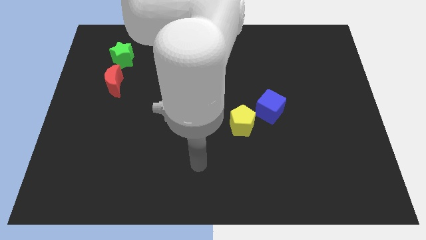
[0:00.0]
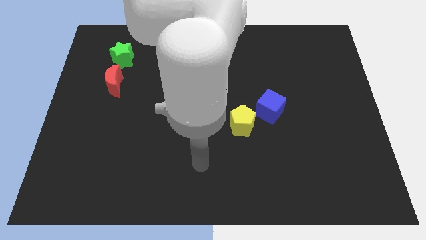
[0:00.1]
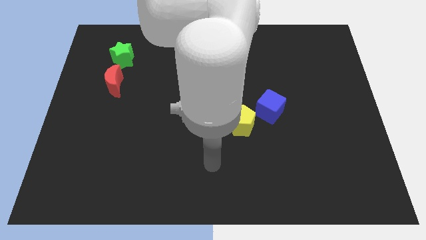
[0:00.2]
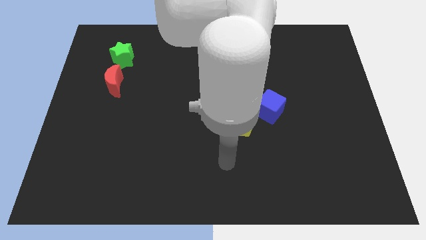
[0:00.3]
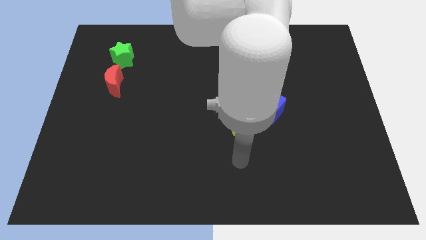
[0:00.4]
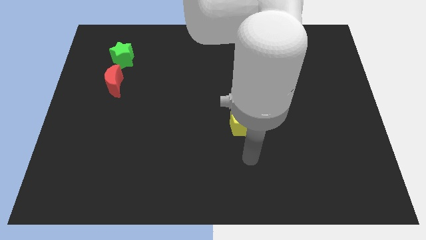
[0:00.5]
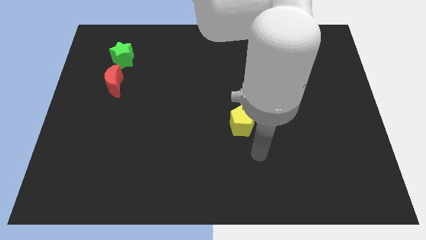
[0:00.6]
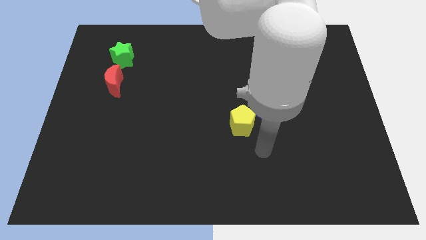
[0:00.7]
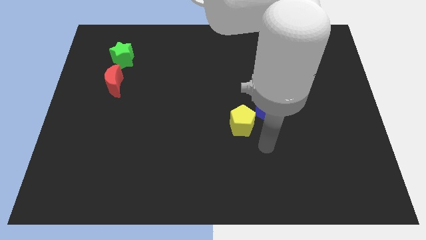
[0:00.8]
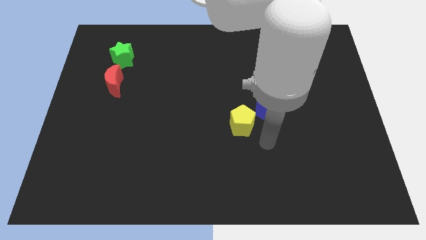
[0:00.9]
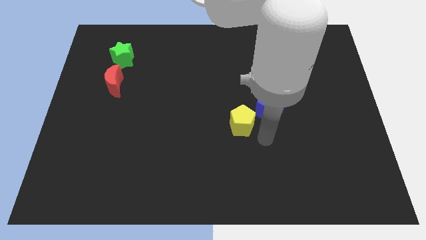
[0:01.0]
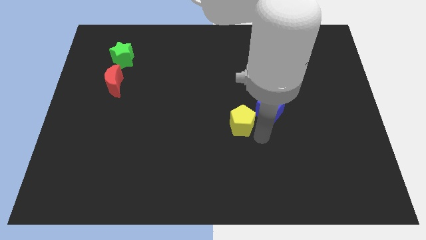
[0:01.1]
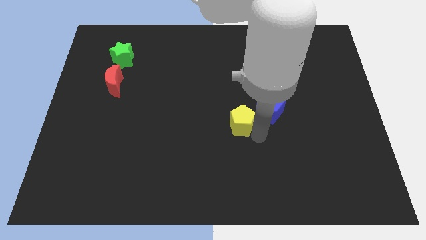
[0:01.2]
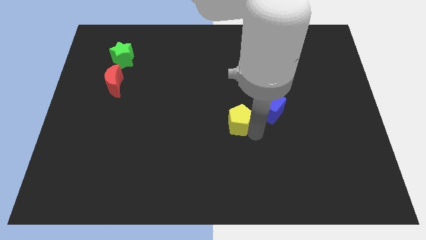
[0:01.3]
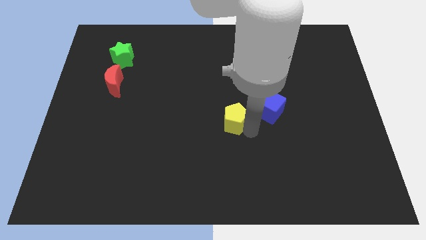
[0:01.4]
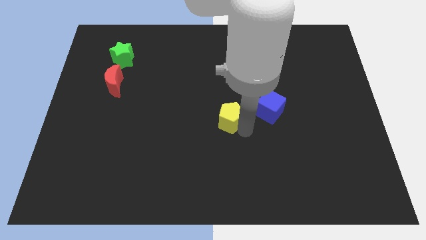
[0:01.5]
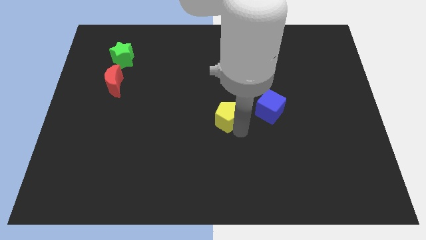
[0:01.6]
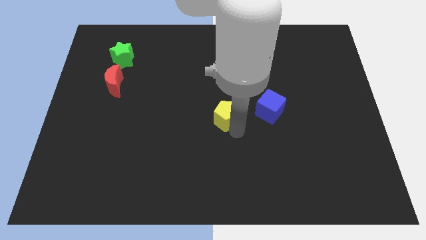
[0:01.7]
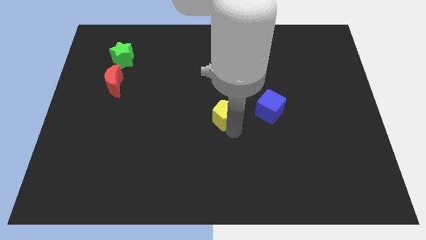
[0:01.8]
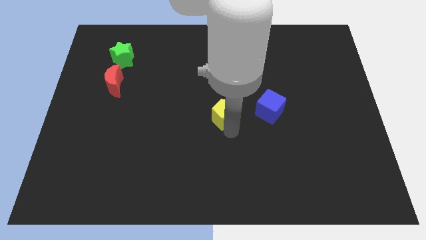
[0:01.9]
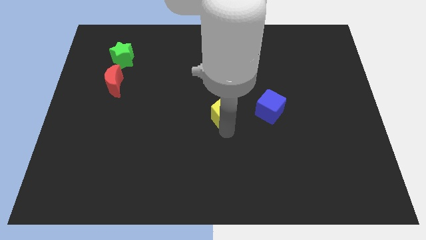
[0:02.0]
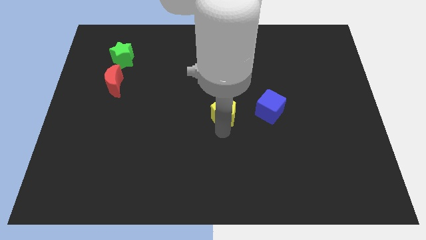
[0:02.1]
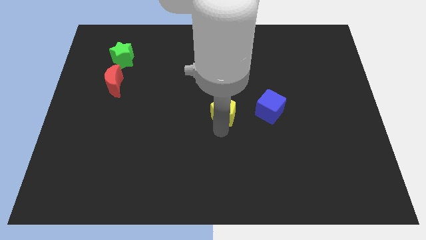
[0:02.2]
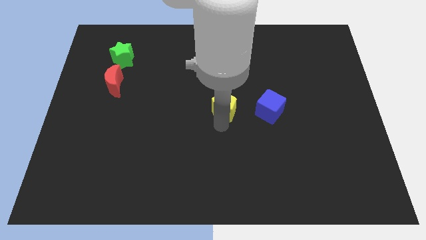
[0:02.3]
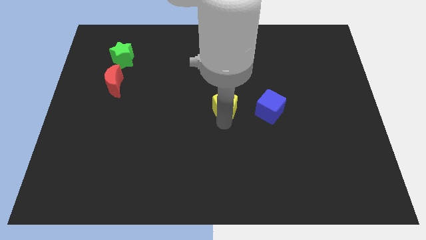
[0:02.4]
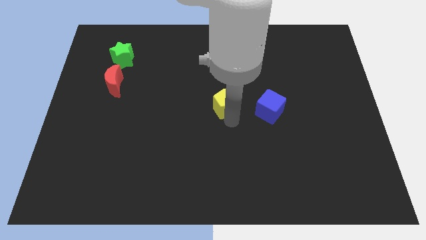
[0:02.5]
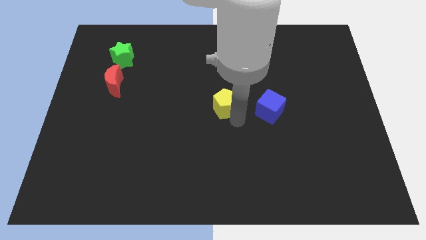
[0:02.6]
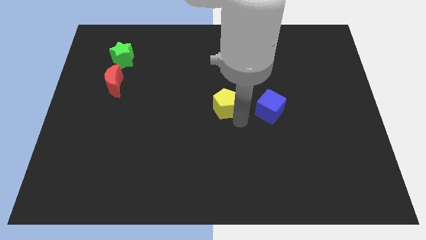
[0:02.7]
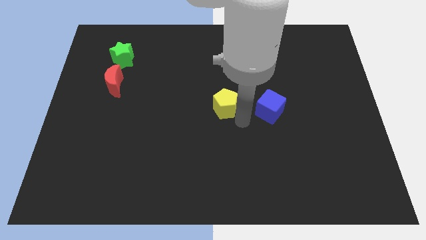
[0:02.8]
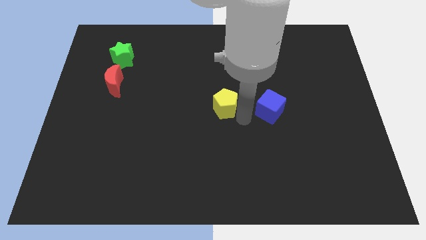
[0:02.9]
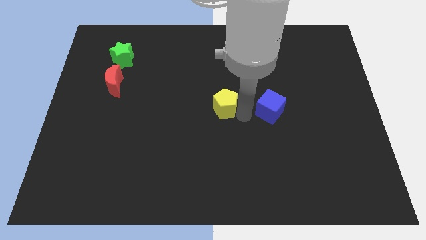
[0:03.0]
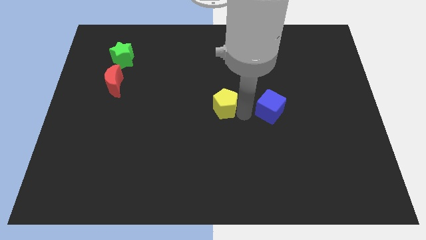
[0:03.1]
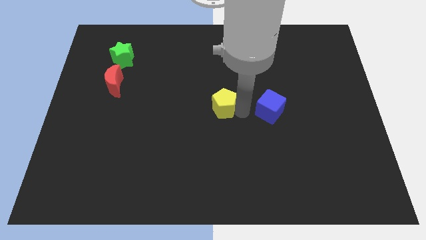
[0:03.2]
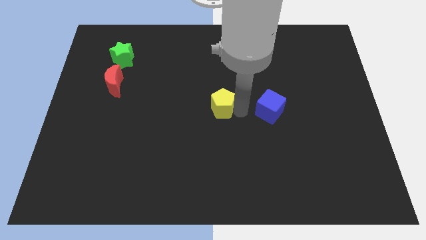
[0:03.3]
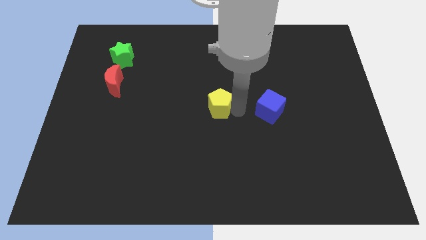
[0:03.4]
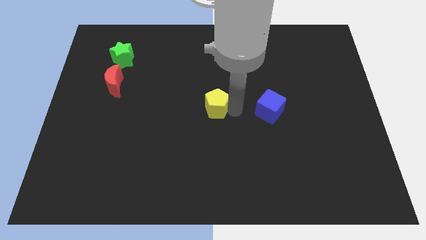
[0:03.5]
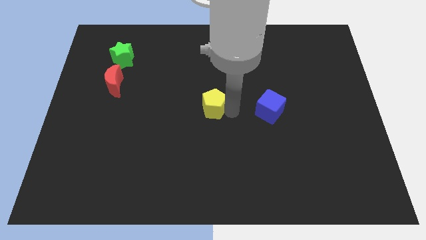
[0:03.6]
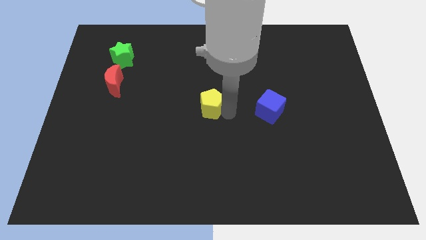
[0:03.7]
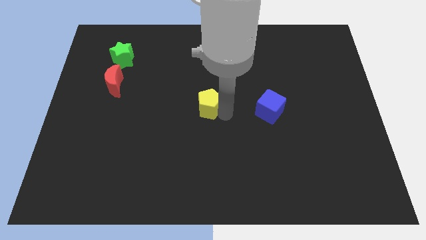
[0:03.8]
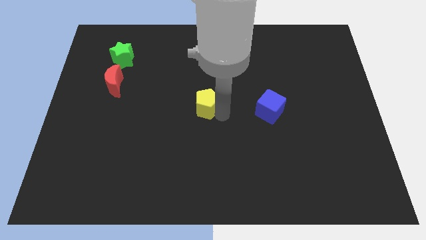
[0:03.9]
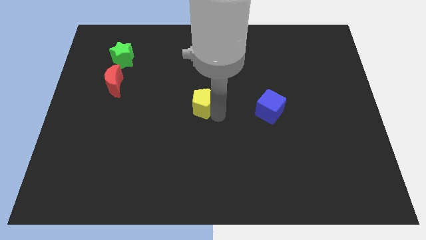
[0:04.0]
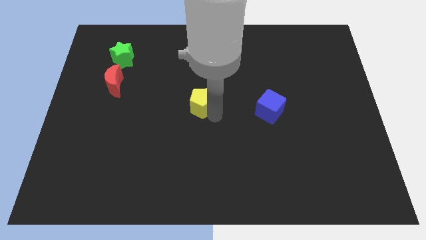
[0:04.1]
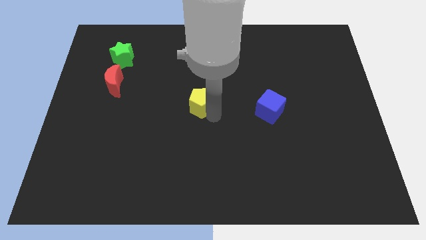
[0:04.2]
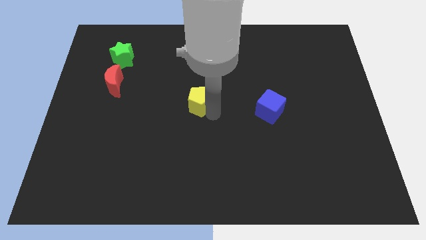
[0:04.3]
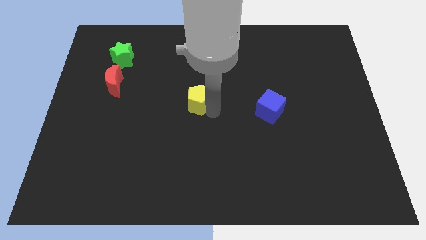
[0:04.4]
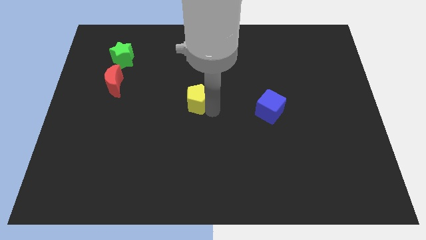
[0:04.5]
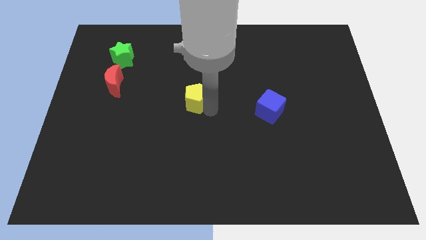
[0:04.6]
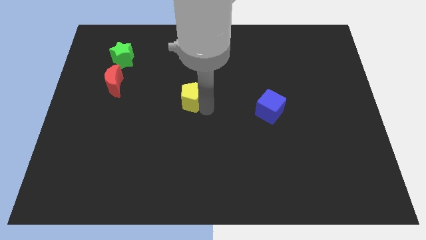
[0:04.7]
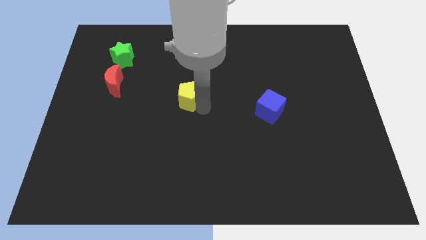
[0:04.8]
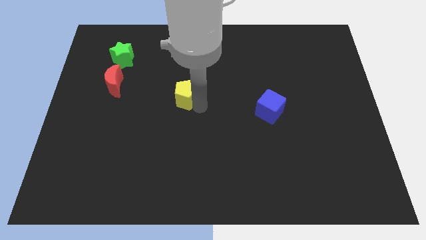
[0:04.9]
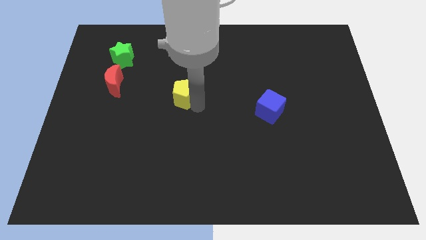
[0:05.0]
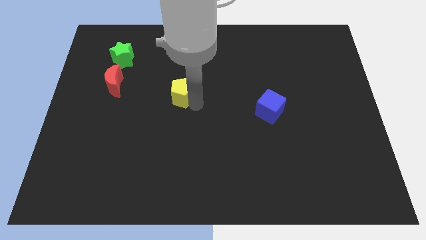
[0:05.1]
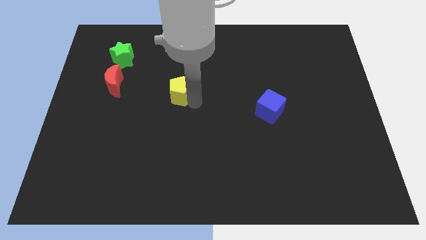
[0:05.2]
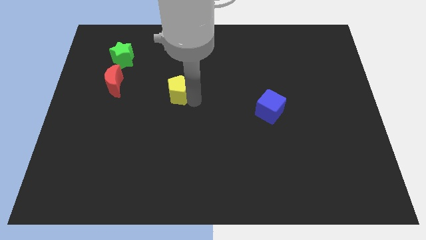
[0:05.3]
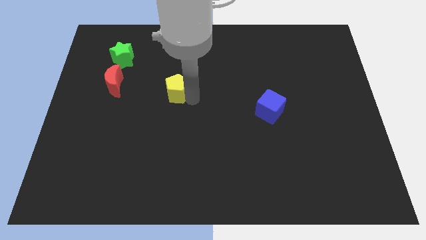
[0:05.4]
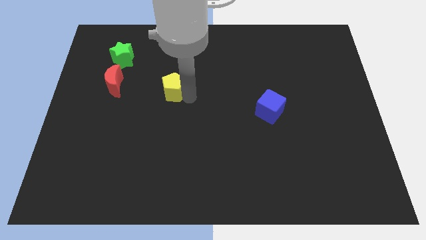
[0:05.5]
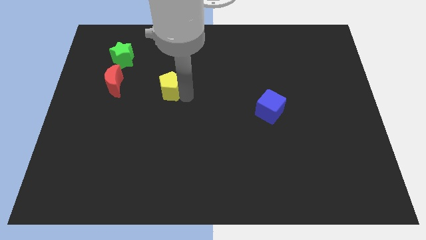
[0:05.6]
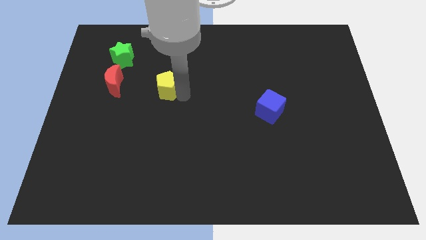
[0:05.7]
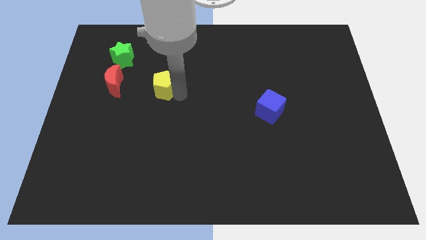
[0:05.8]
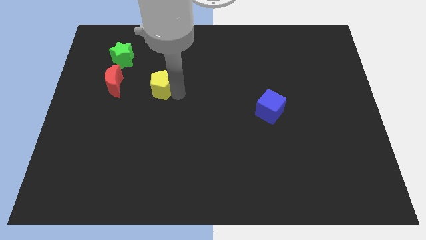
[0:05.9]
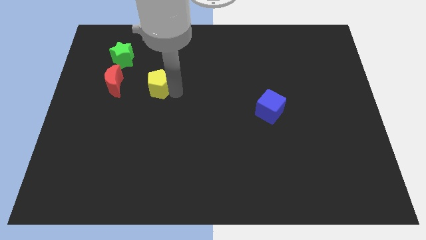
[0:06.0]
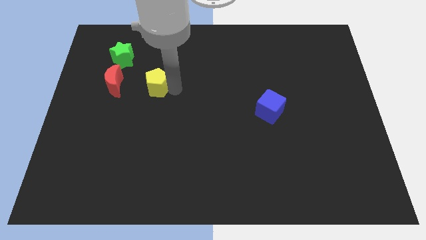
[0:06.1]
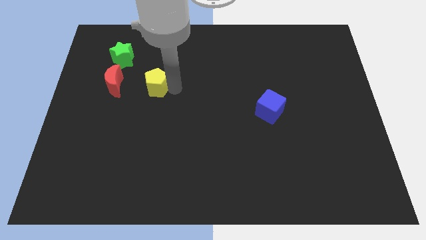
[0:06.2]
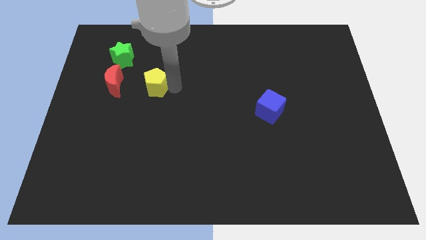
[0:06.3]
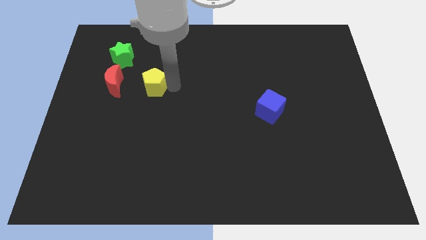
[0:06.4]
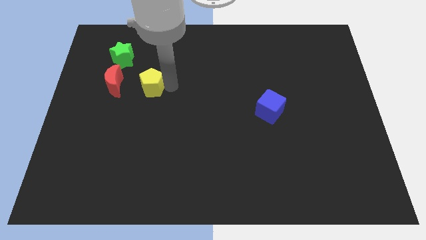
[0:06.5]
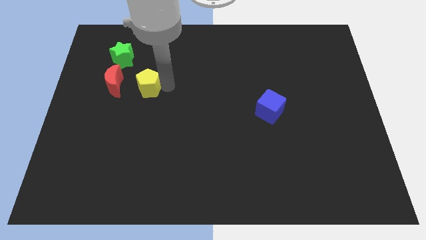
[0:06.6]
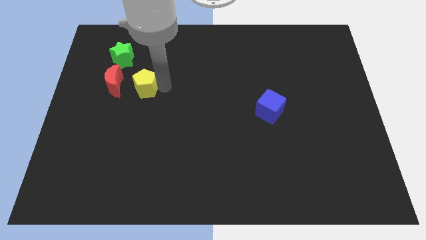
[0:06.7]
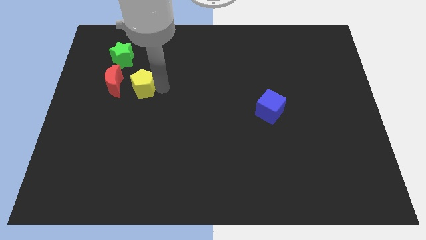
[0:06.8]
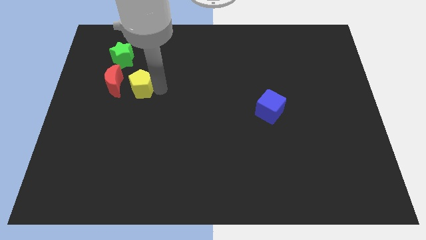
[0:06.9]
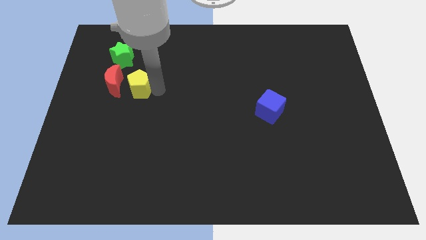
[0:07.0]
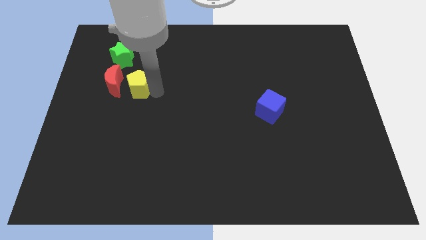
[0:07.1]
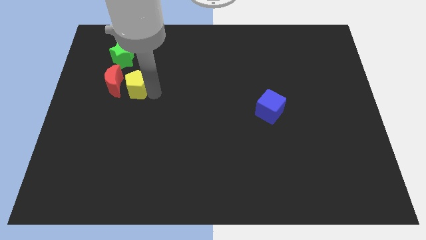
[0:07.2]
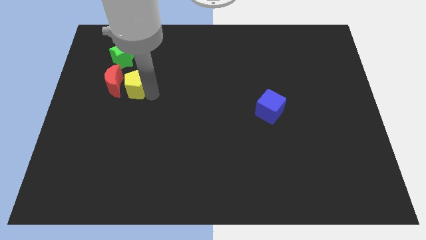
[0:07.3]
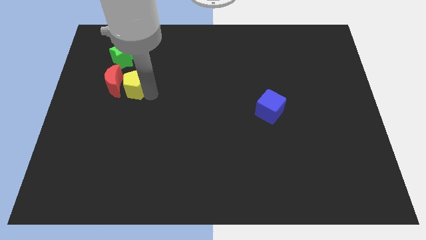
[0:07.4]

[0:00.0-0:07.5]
push the yellow block towards the red moon

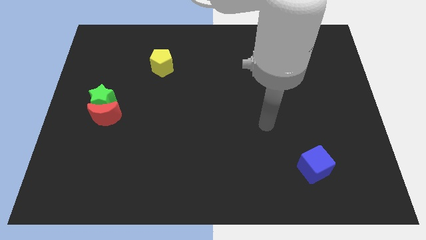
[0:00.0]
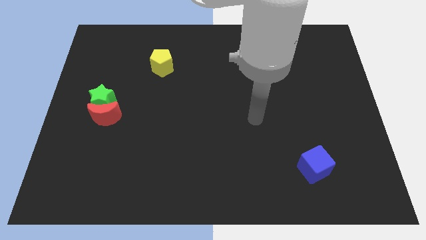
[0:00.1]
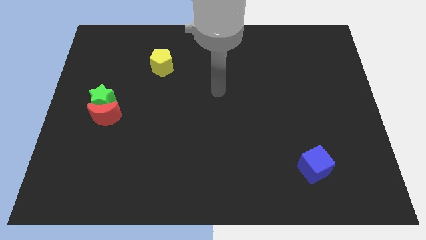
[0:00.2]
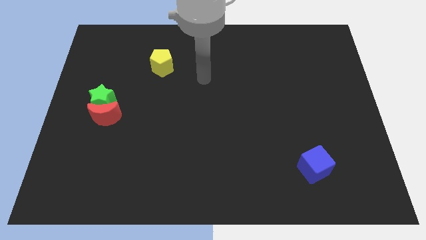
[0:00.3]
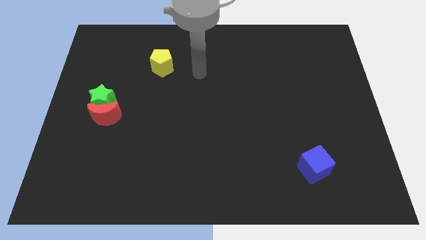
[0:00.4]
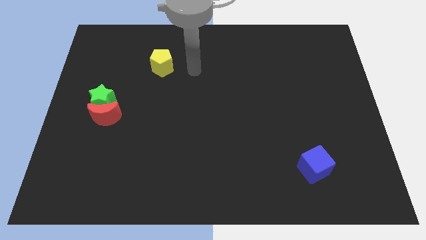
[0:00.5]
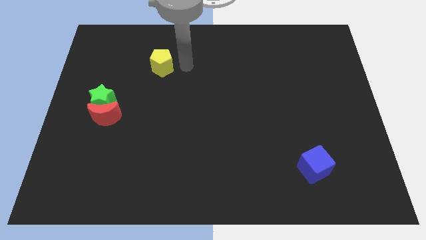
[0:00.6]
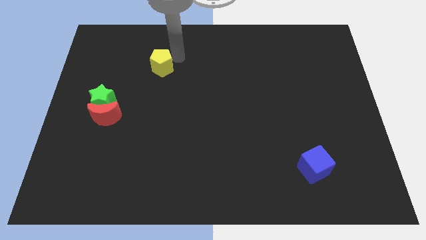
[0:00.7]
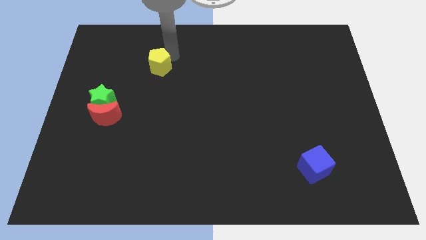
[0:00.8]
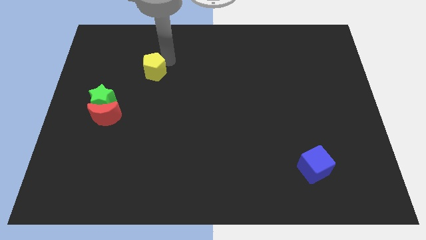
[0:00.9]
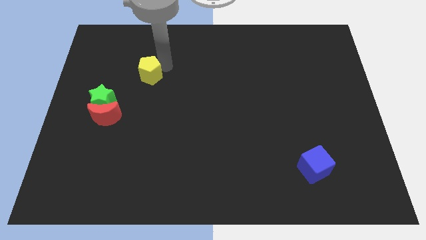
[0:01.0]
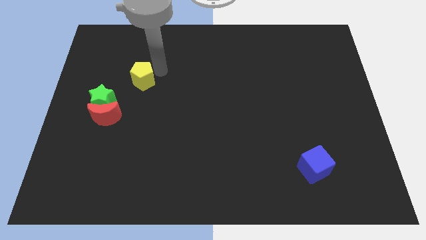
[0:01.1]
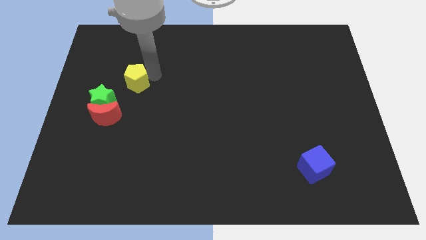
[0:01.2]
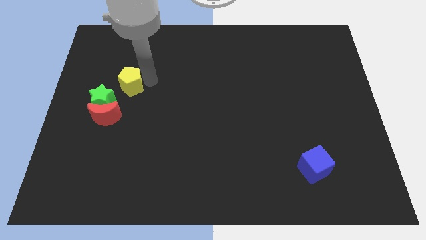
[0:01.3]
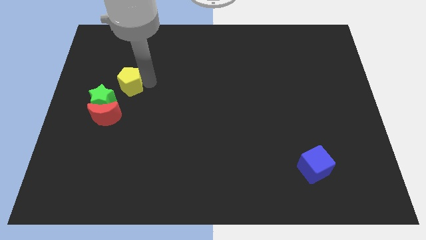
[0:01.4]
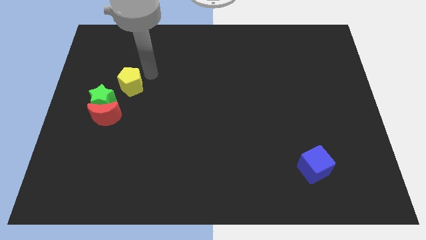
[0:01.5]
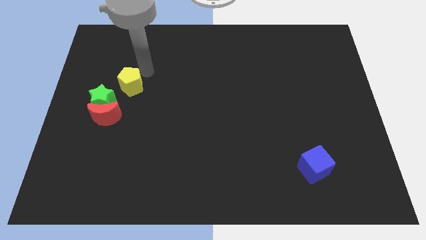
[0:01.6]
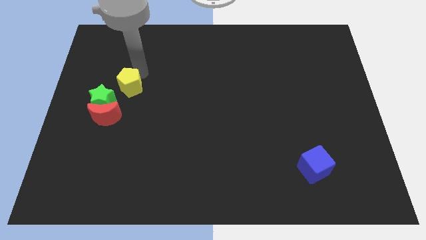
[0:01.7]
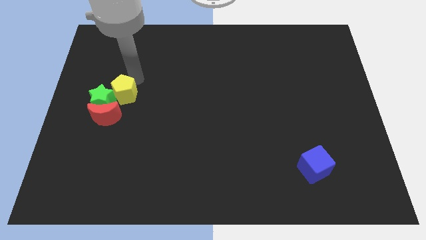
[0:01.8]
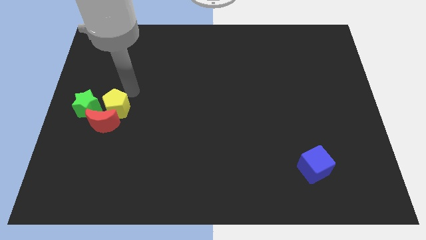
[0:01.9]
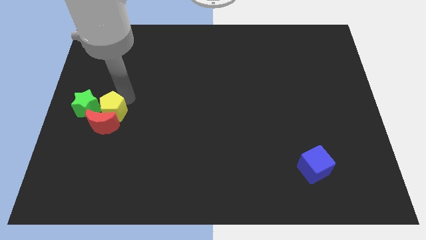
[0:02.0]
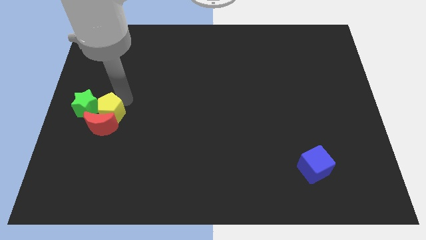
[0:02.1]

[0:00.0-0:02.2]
push the pentagon next to the moon
